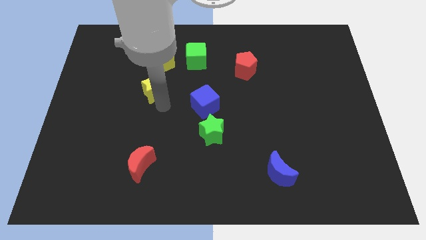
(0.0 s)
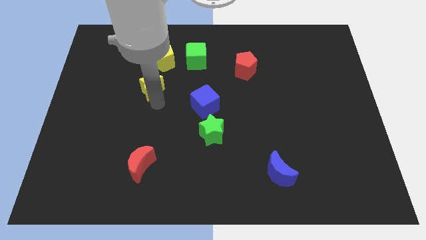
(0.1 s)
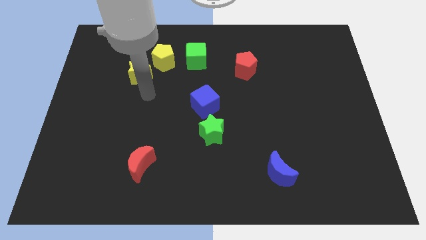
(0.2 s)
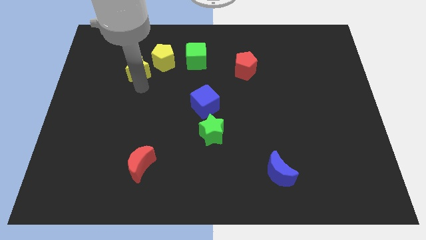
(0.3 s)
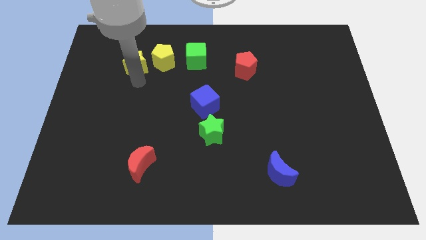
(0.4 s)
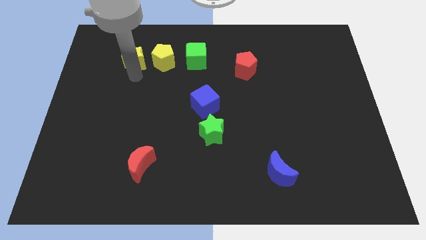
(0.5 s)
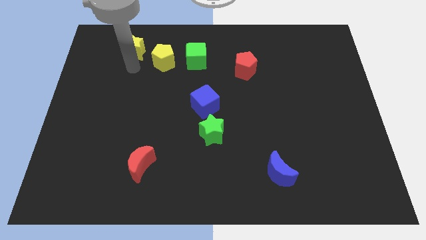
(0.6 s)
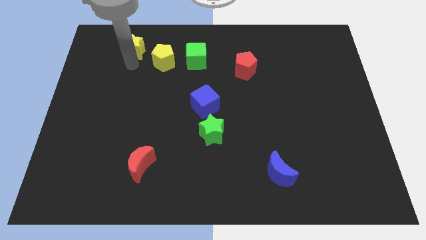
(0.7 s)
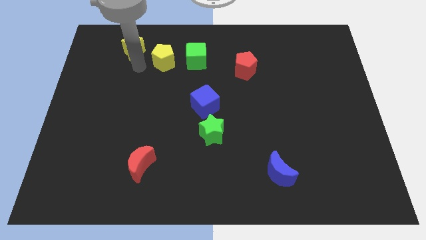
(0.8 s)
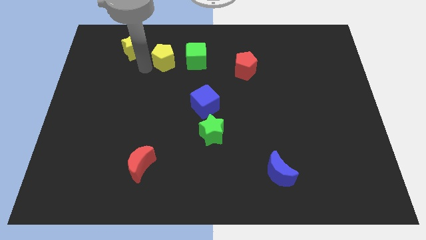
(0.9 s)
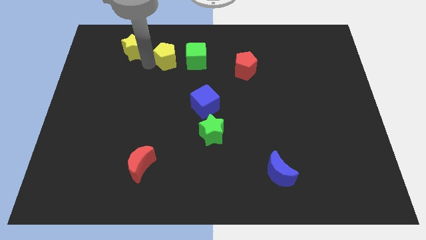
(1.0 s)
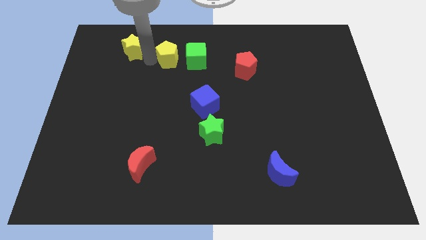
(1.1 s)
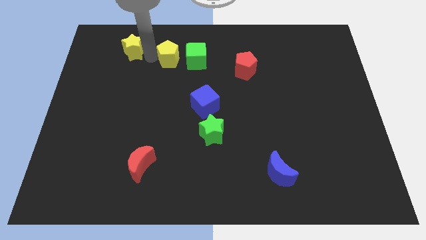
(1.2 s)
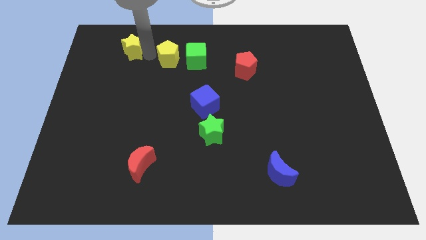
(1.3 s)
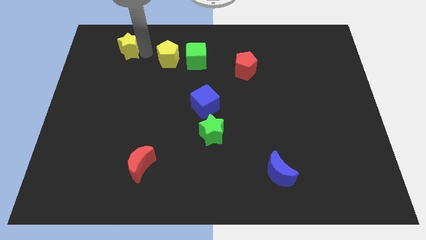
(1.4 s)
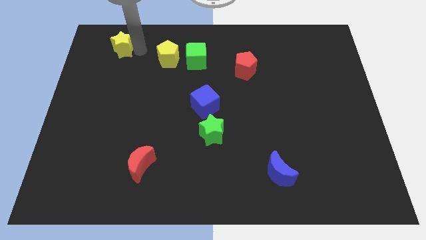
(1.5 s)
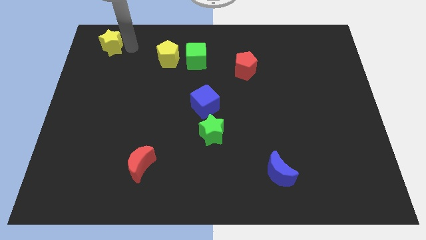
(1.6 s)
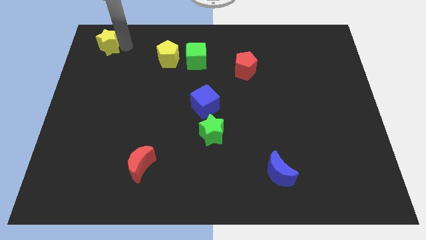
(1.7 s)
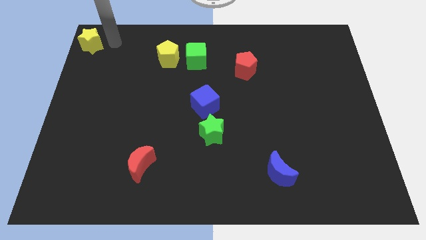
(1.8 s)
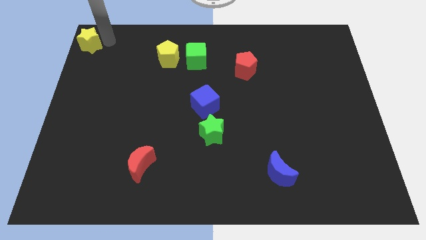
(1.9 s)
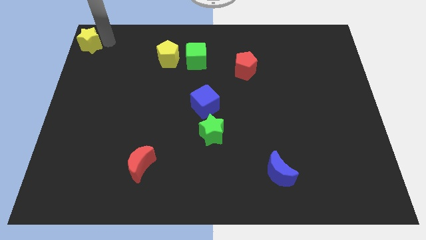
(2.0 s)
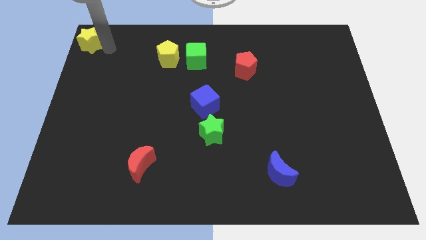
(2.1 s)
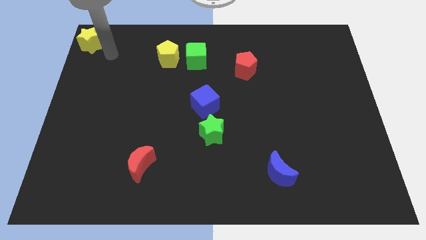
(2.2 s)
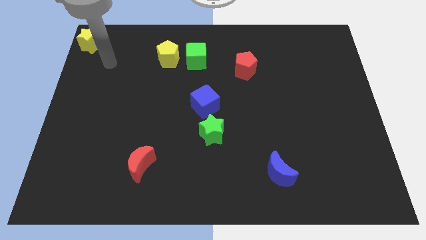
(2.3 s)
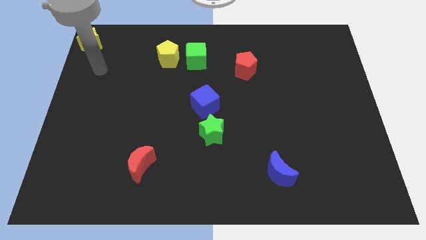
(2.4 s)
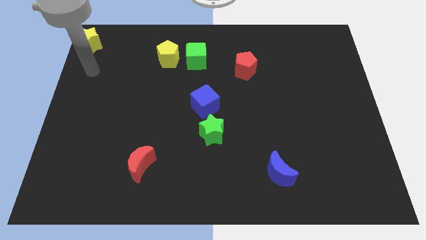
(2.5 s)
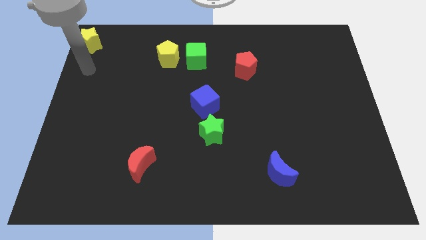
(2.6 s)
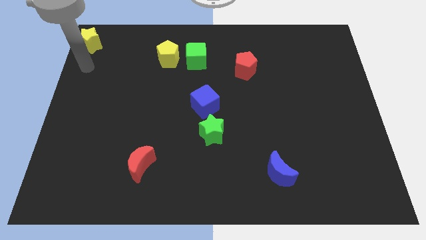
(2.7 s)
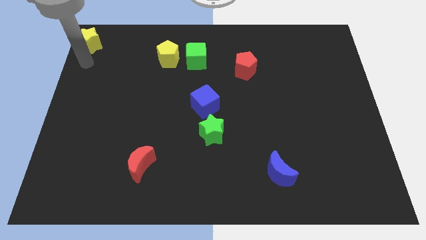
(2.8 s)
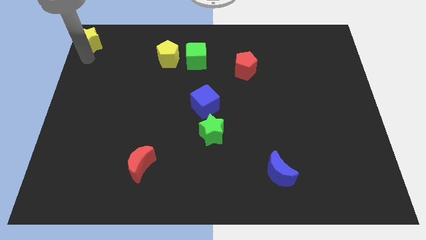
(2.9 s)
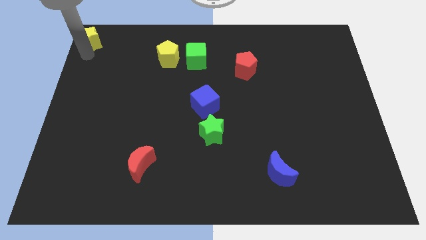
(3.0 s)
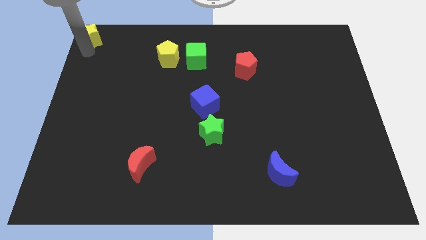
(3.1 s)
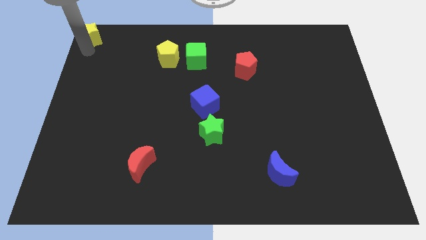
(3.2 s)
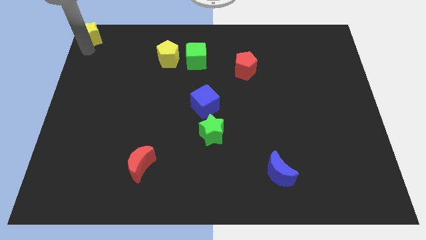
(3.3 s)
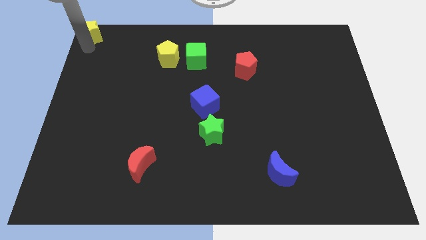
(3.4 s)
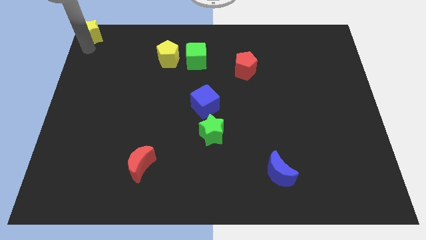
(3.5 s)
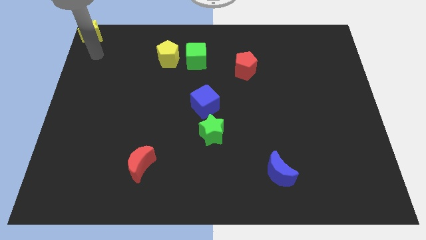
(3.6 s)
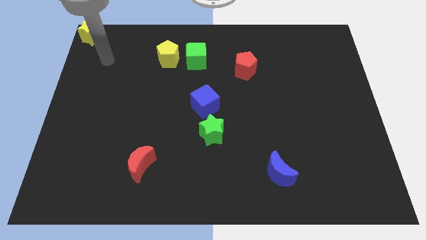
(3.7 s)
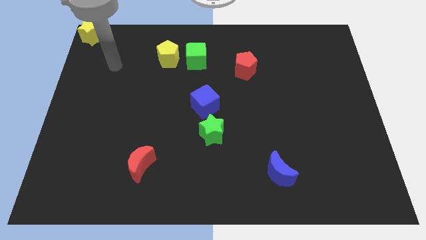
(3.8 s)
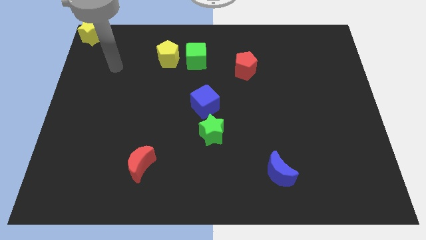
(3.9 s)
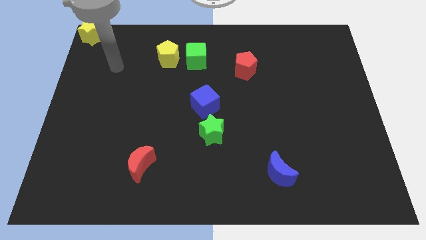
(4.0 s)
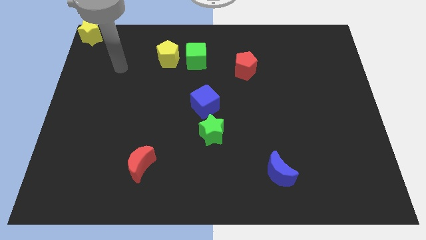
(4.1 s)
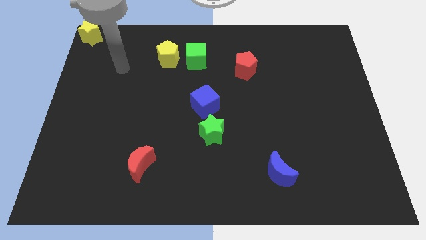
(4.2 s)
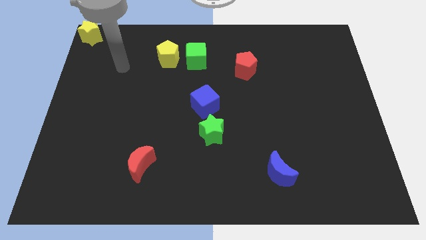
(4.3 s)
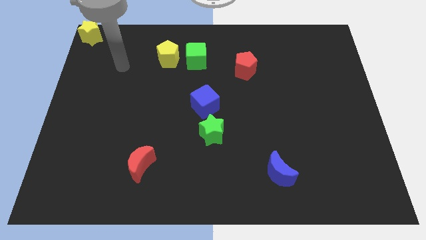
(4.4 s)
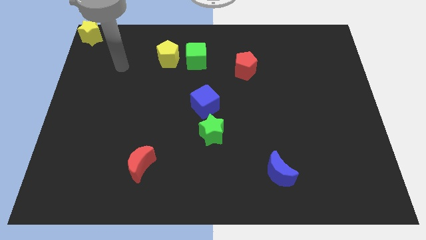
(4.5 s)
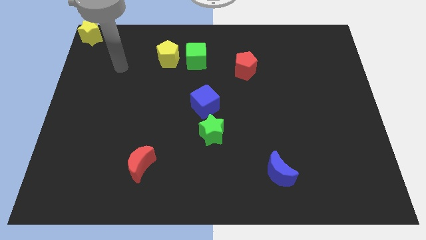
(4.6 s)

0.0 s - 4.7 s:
push the yellow star towards the top left corner of the board

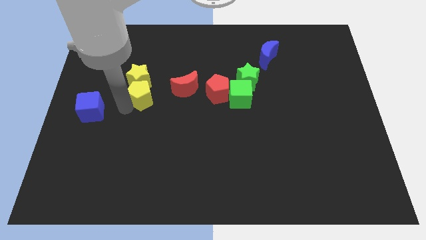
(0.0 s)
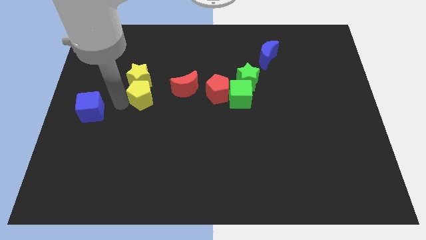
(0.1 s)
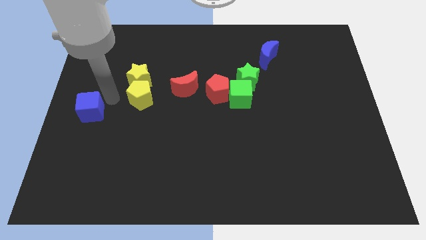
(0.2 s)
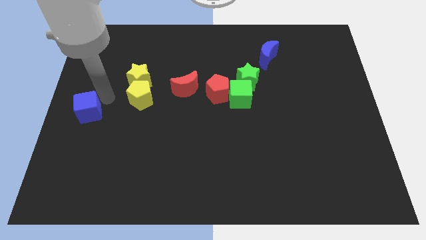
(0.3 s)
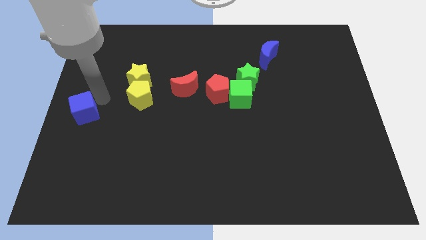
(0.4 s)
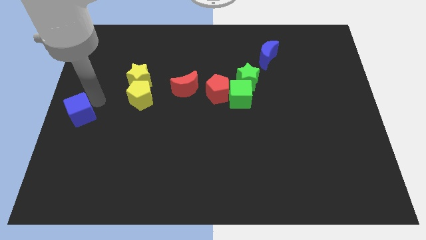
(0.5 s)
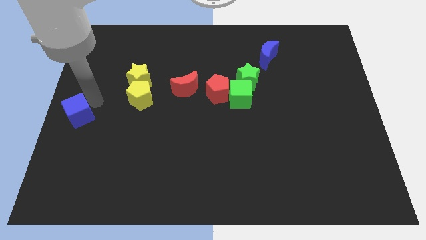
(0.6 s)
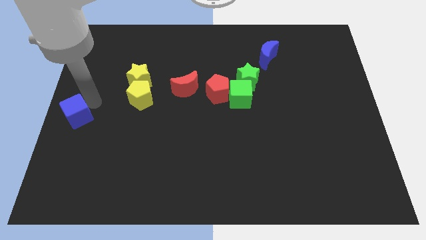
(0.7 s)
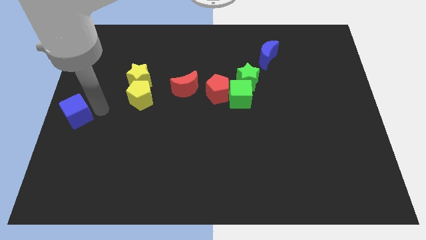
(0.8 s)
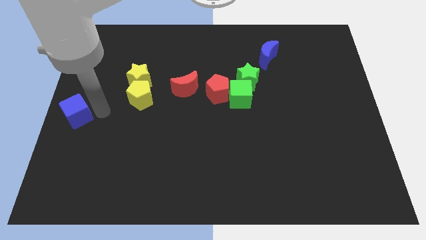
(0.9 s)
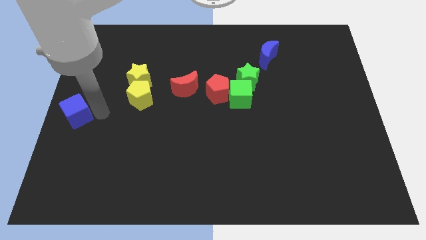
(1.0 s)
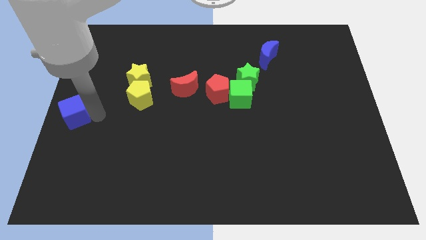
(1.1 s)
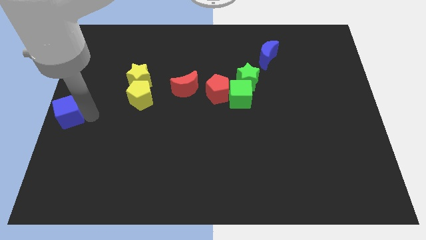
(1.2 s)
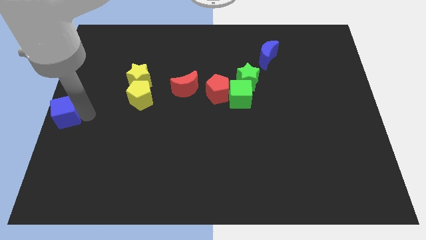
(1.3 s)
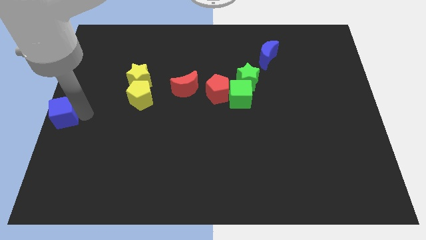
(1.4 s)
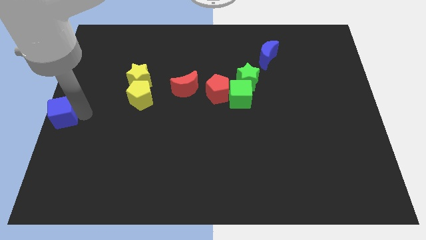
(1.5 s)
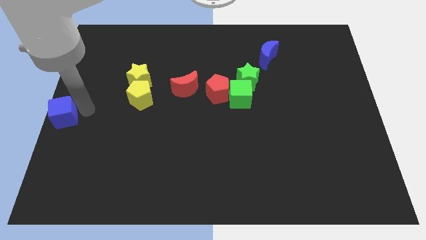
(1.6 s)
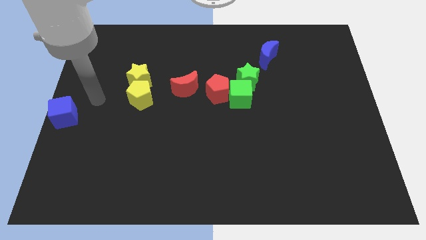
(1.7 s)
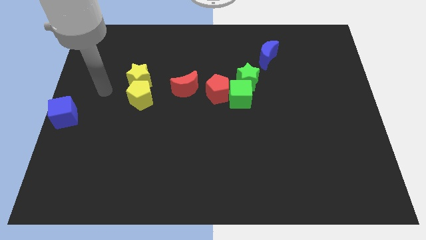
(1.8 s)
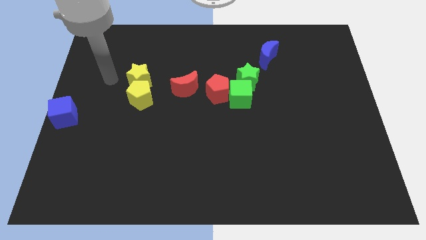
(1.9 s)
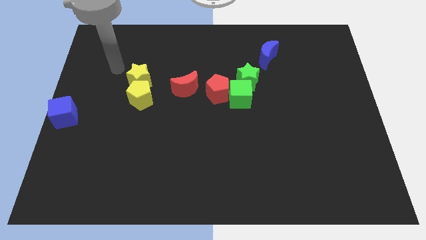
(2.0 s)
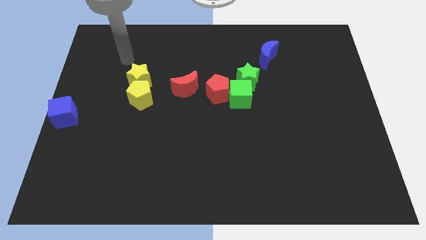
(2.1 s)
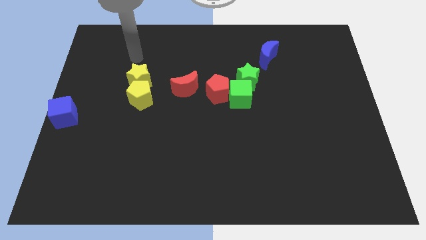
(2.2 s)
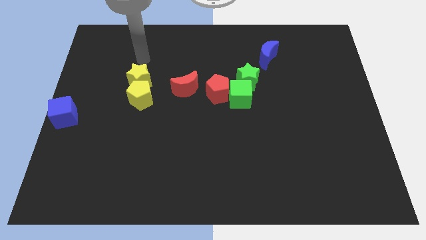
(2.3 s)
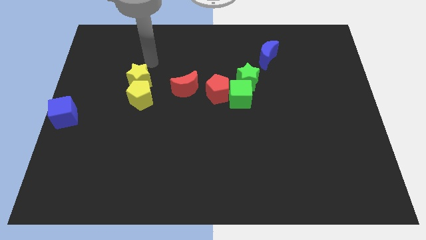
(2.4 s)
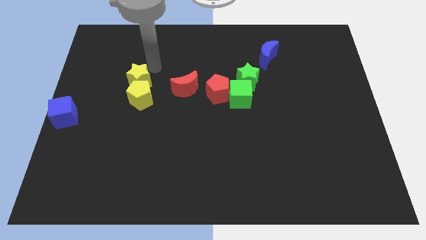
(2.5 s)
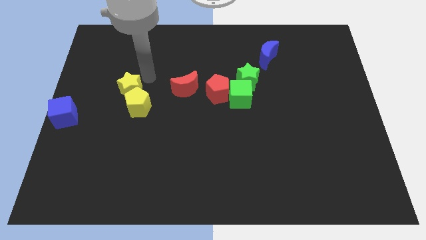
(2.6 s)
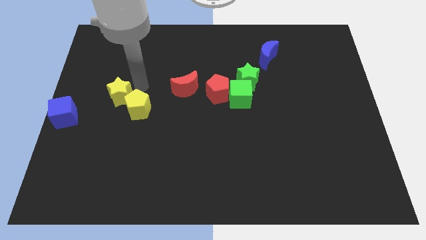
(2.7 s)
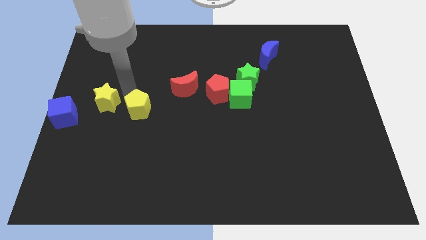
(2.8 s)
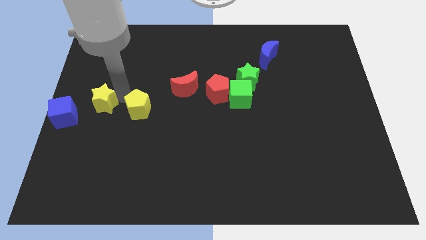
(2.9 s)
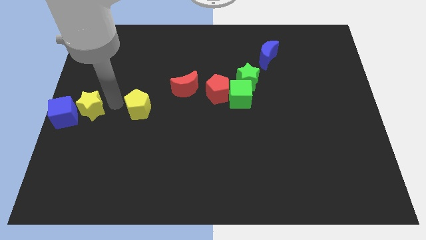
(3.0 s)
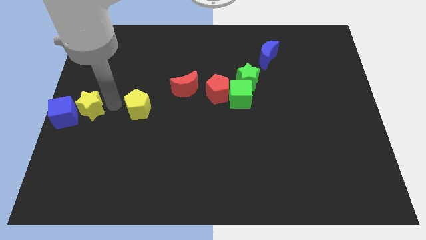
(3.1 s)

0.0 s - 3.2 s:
move the yellow star to the right of the blue cube

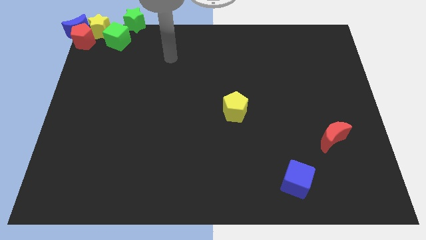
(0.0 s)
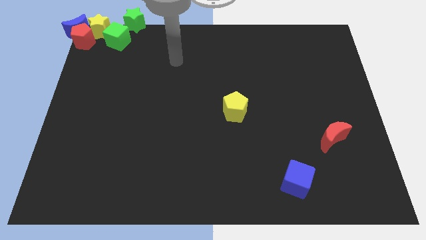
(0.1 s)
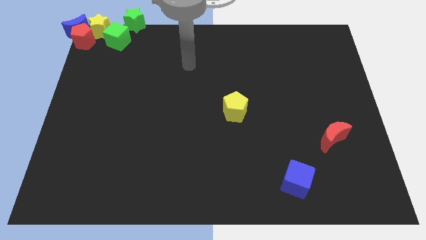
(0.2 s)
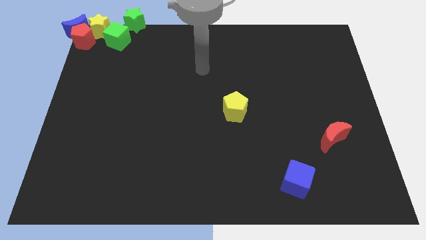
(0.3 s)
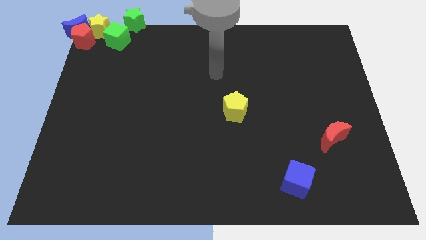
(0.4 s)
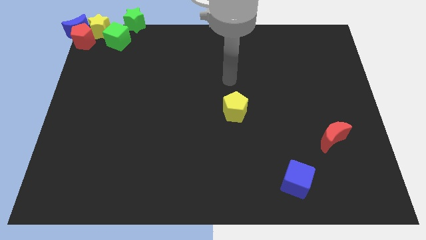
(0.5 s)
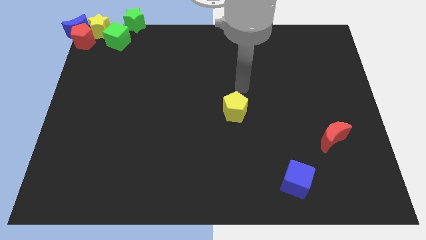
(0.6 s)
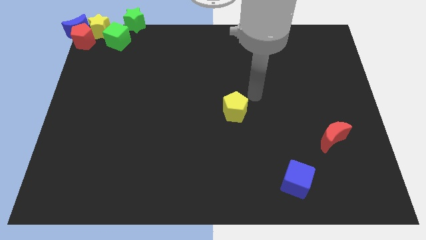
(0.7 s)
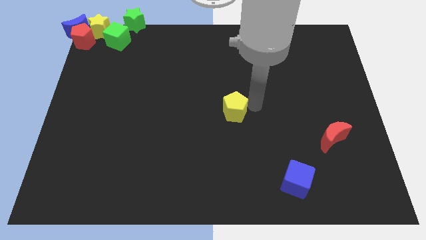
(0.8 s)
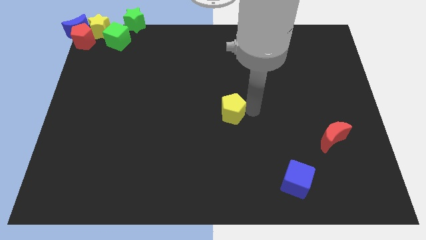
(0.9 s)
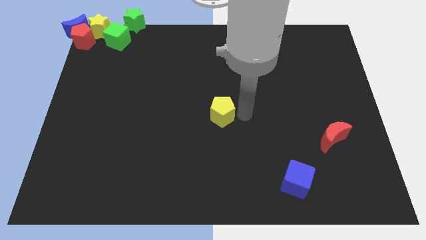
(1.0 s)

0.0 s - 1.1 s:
place the arm right to the yellow pentagon

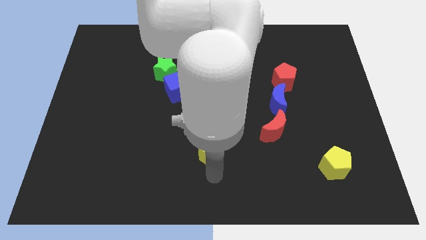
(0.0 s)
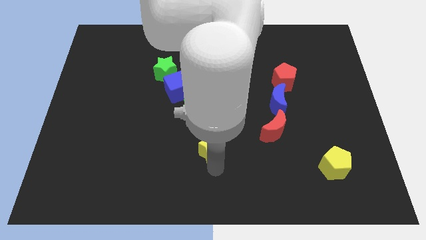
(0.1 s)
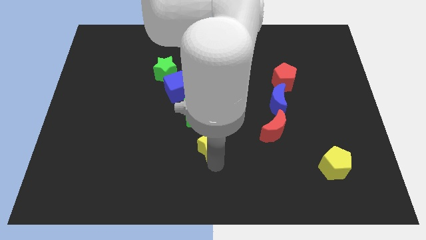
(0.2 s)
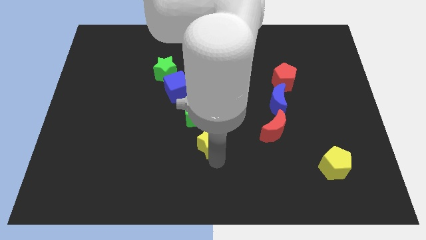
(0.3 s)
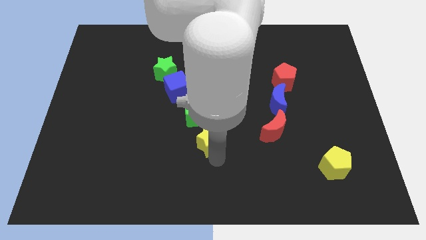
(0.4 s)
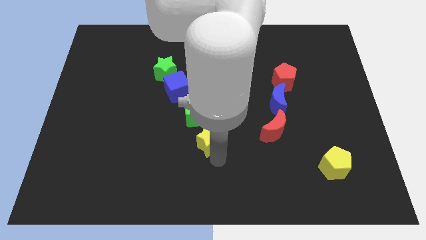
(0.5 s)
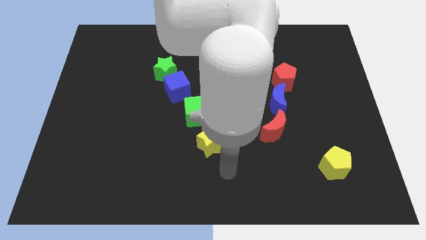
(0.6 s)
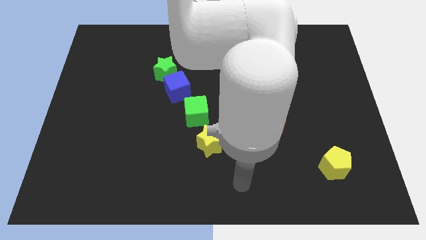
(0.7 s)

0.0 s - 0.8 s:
move your arm away from yellow star
